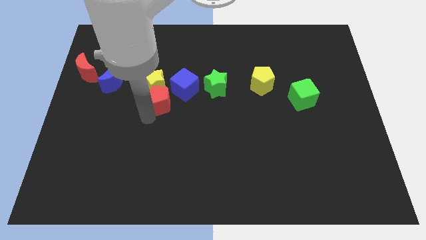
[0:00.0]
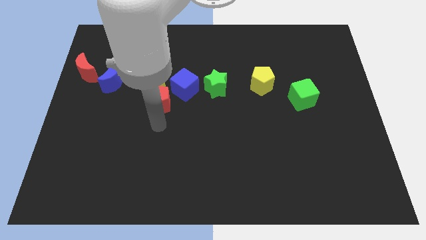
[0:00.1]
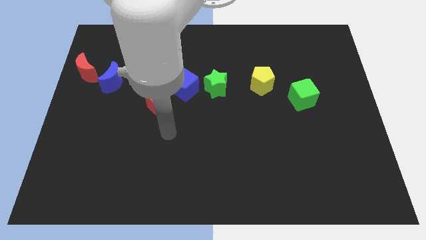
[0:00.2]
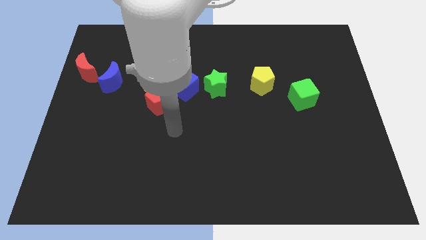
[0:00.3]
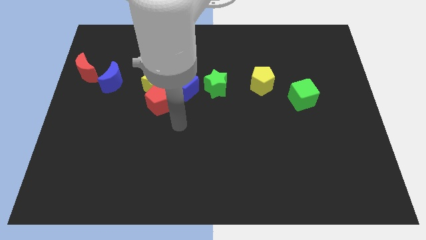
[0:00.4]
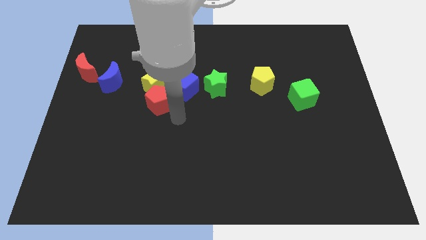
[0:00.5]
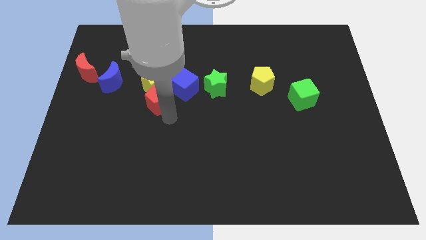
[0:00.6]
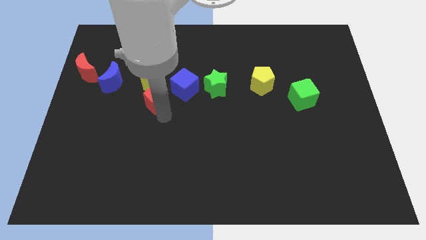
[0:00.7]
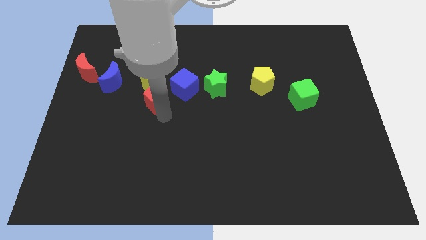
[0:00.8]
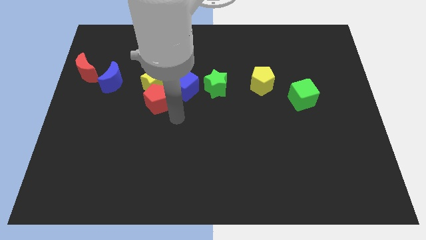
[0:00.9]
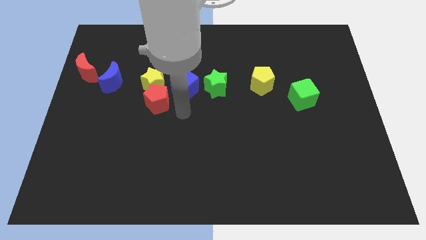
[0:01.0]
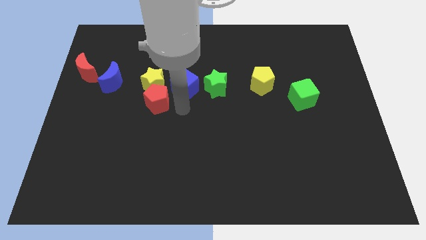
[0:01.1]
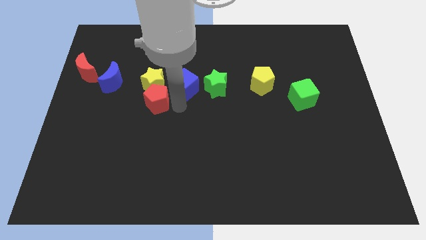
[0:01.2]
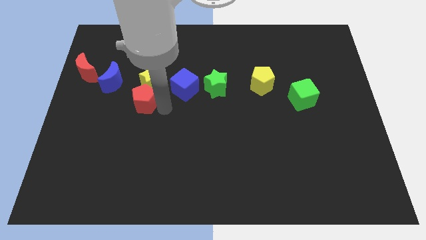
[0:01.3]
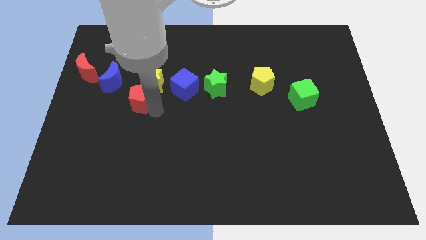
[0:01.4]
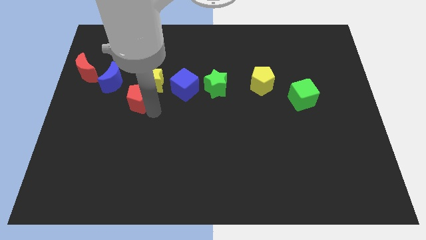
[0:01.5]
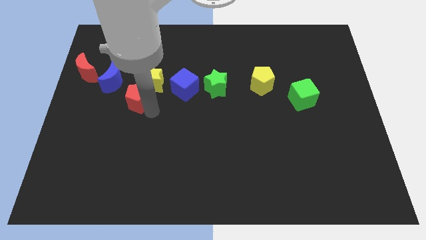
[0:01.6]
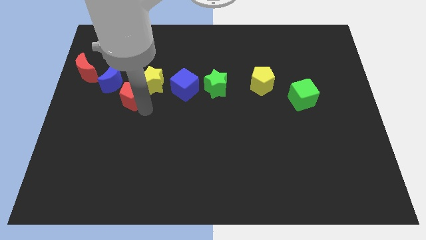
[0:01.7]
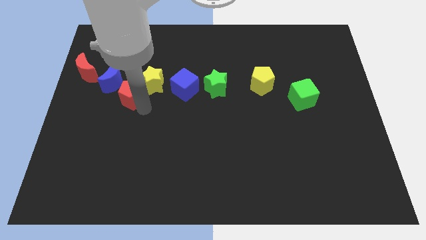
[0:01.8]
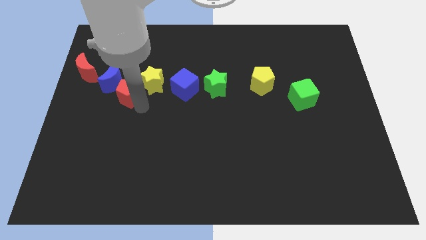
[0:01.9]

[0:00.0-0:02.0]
slide the red pentagon diagonally bottom left to the yellow star

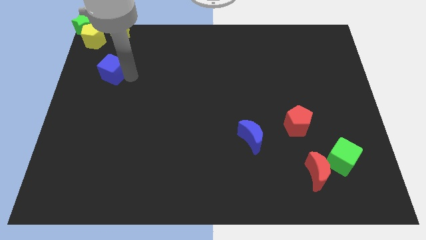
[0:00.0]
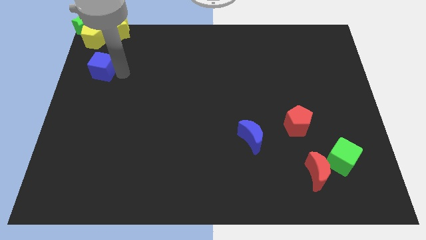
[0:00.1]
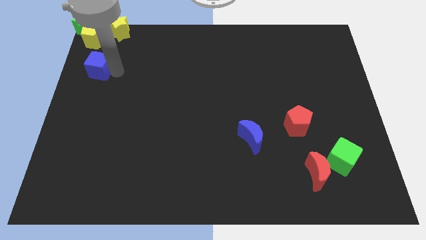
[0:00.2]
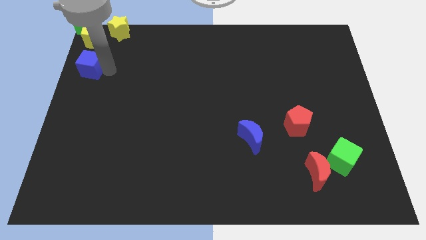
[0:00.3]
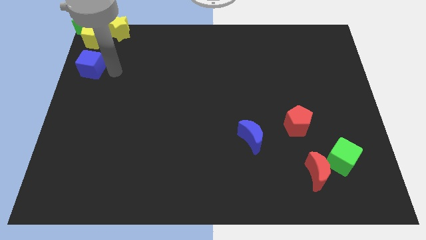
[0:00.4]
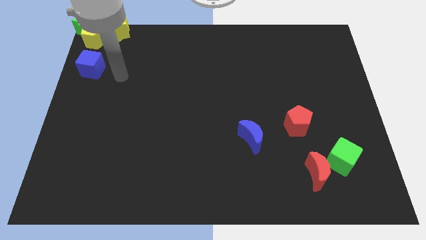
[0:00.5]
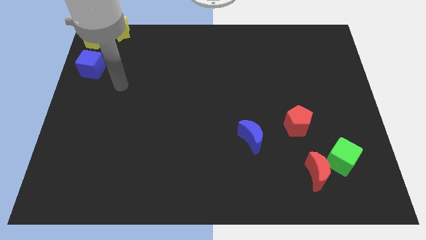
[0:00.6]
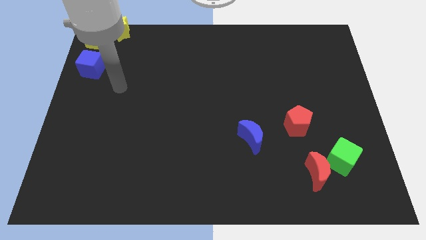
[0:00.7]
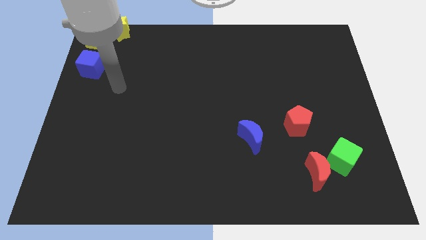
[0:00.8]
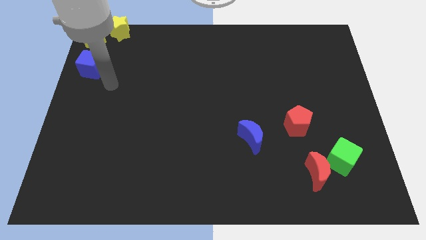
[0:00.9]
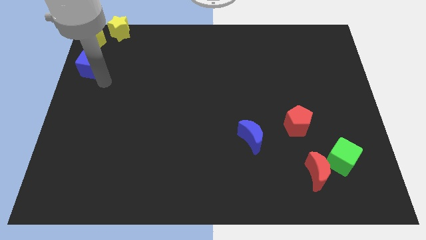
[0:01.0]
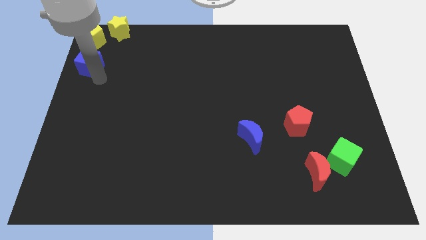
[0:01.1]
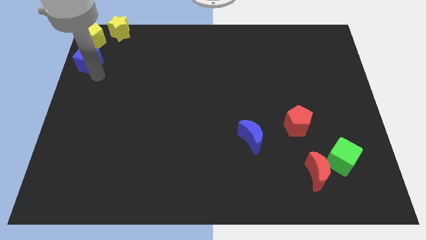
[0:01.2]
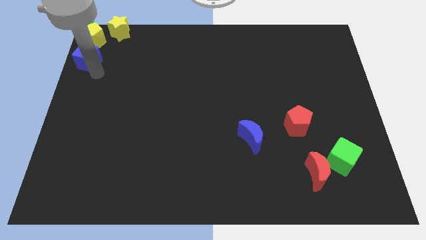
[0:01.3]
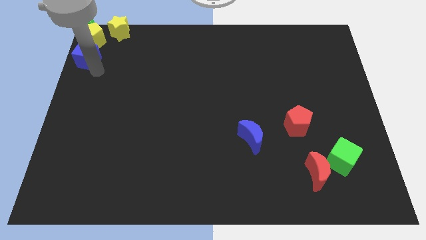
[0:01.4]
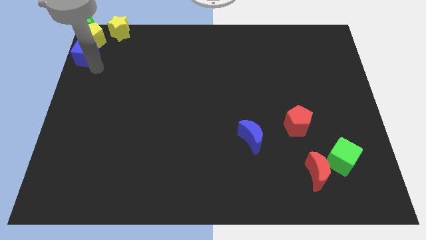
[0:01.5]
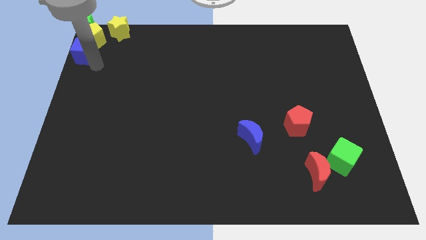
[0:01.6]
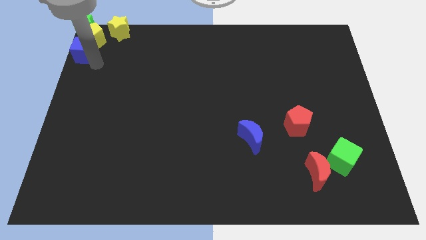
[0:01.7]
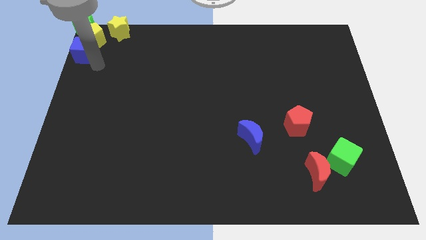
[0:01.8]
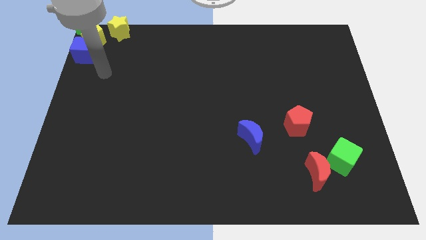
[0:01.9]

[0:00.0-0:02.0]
push the blue cube to the bottom left side of the yellow pentagon

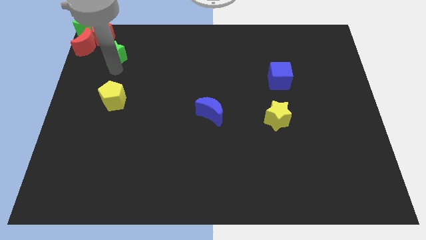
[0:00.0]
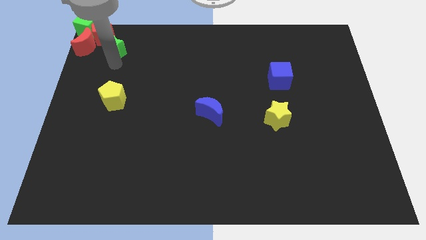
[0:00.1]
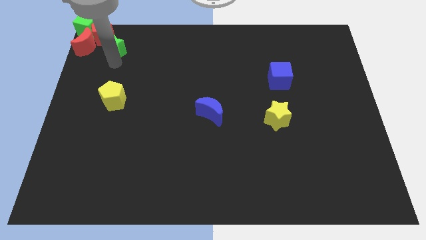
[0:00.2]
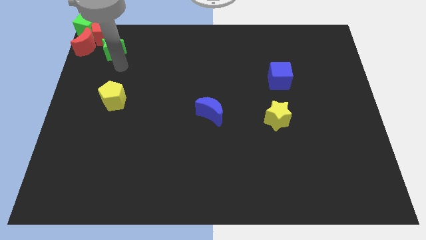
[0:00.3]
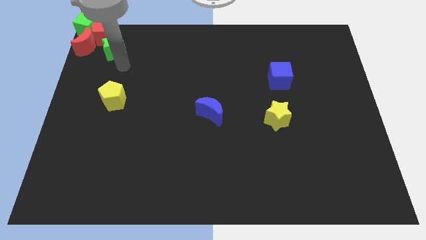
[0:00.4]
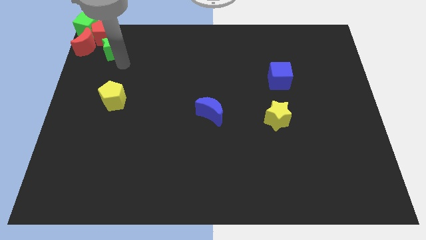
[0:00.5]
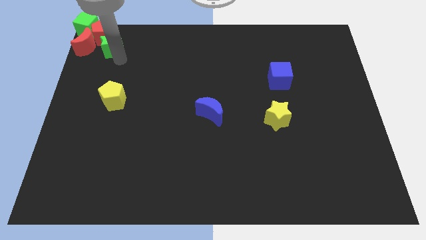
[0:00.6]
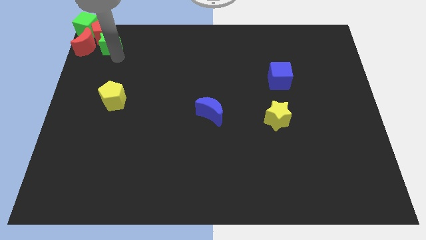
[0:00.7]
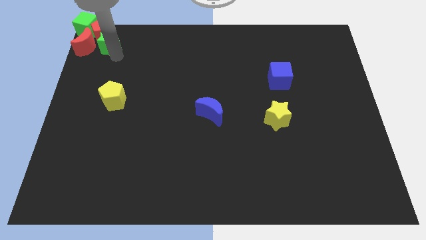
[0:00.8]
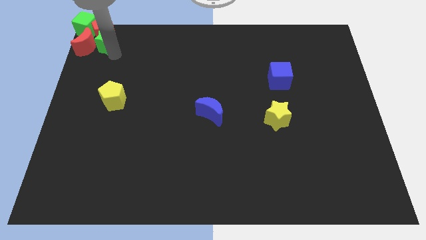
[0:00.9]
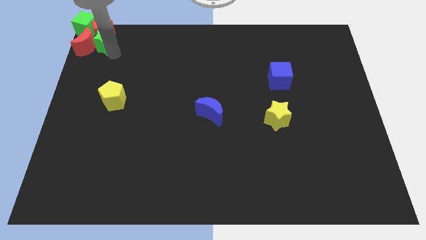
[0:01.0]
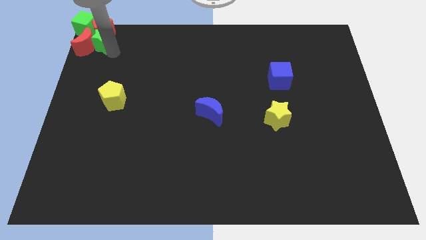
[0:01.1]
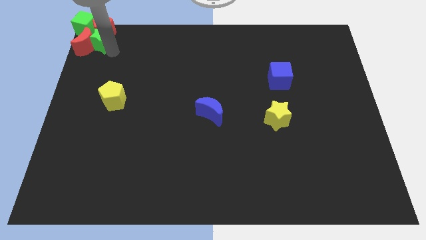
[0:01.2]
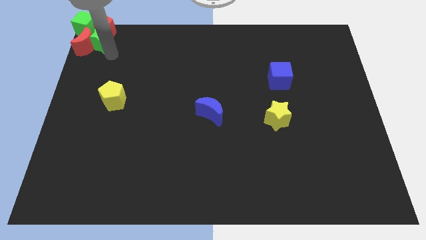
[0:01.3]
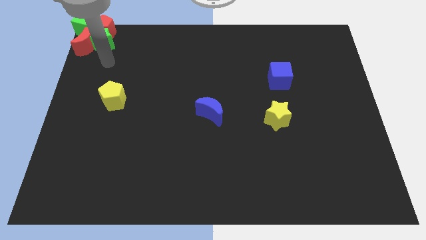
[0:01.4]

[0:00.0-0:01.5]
add green star to the red blocks and green cube at the top left corner

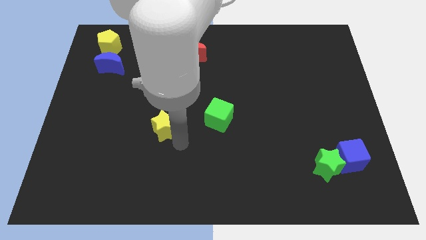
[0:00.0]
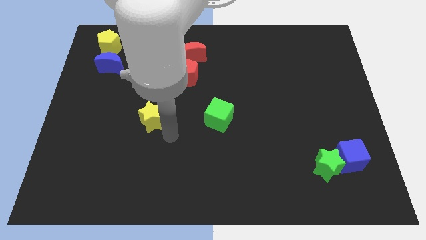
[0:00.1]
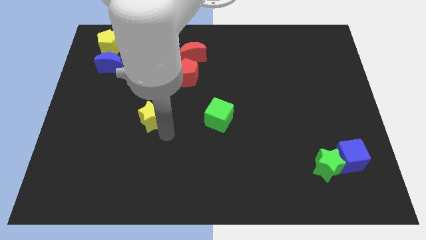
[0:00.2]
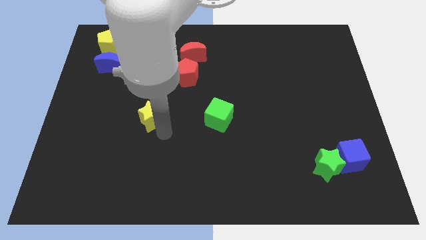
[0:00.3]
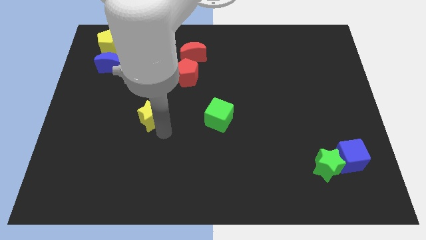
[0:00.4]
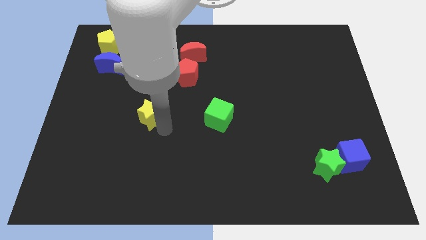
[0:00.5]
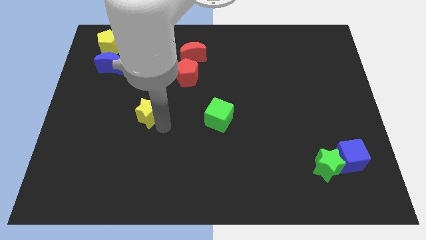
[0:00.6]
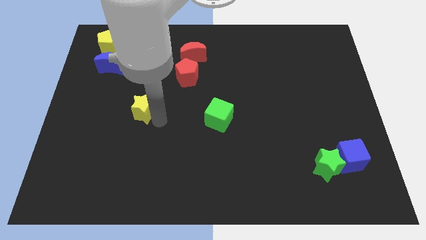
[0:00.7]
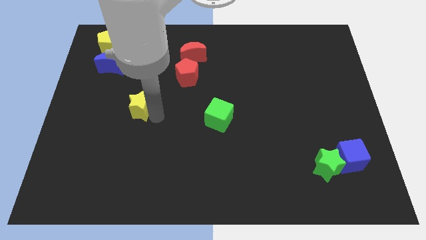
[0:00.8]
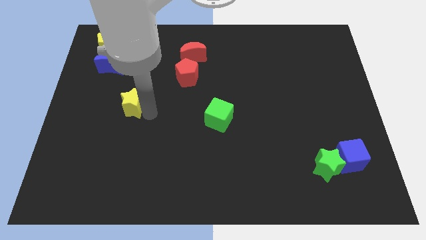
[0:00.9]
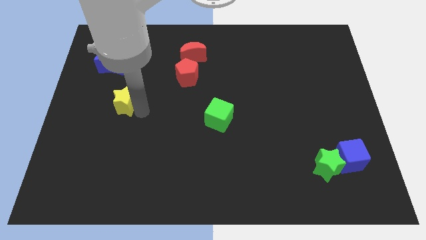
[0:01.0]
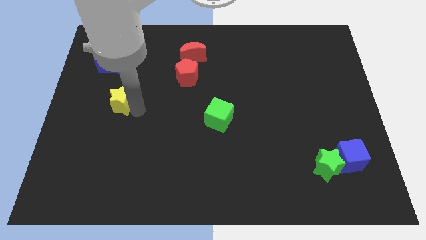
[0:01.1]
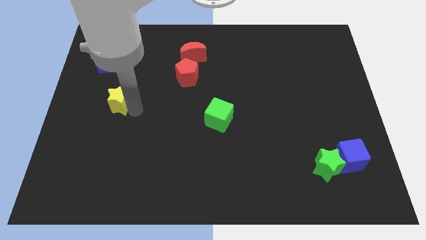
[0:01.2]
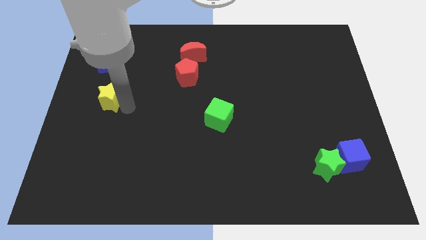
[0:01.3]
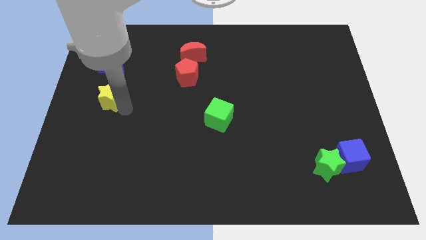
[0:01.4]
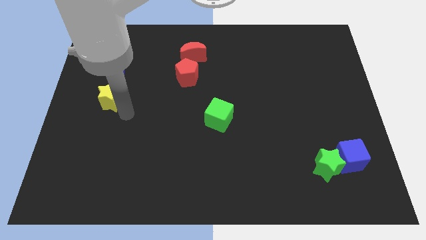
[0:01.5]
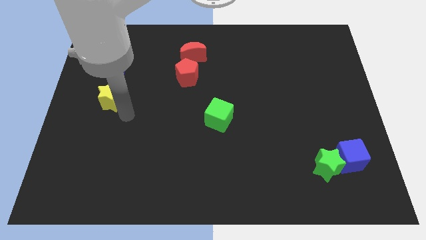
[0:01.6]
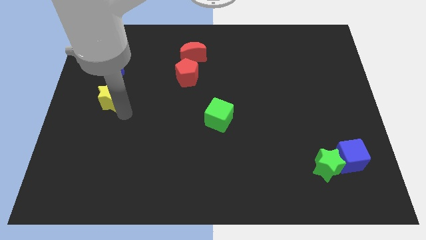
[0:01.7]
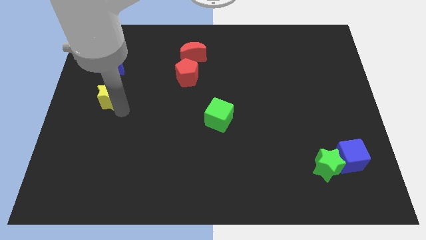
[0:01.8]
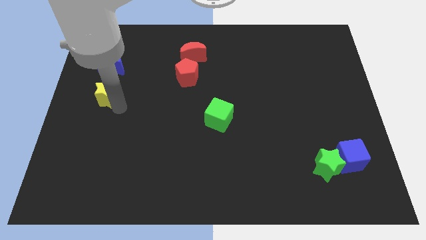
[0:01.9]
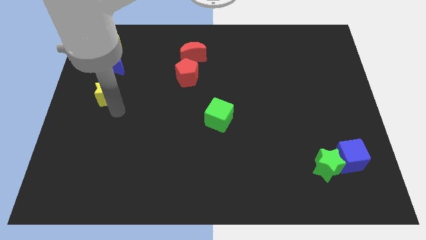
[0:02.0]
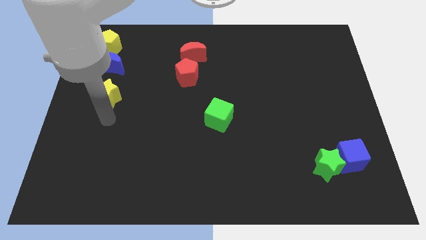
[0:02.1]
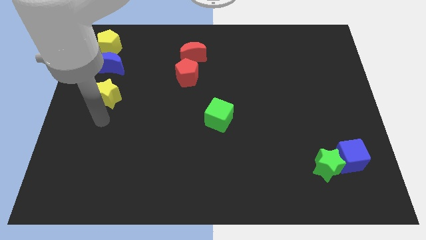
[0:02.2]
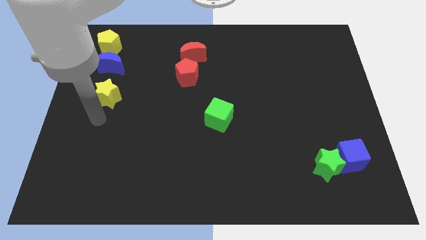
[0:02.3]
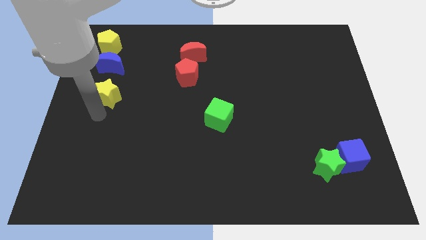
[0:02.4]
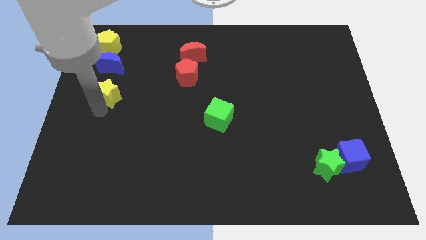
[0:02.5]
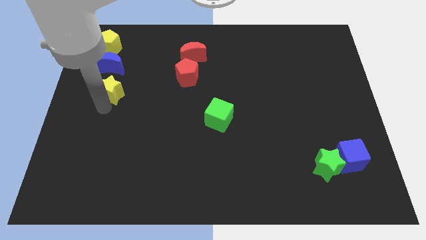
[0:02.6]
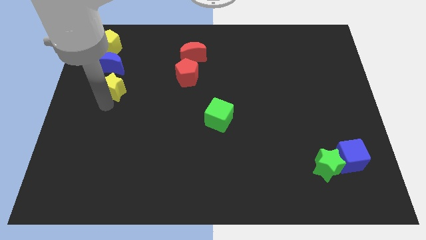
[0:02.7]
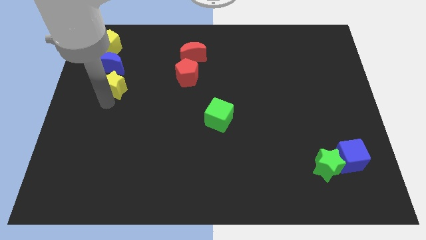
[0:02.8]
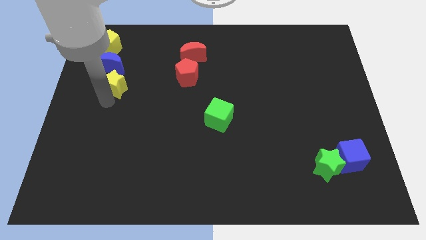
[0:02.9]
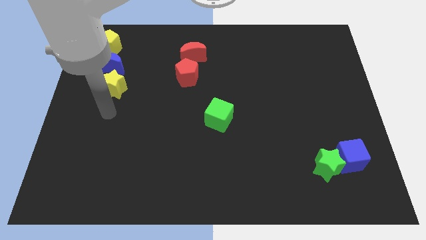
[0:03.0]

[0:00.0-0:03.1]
place yellow star below blue crescent

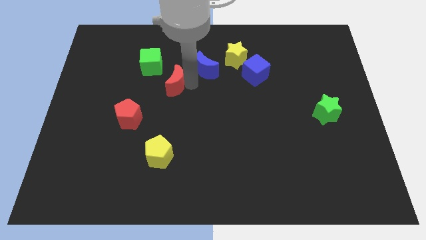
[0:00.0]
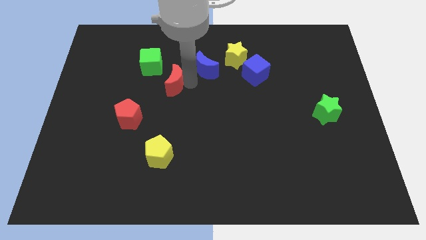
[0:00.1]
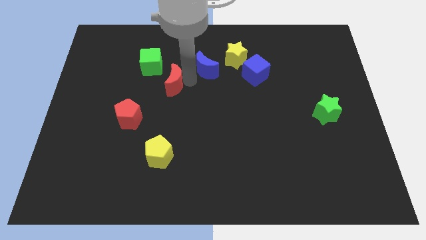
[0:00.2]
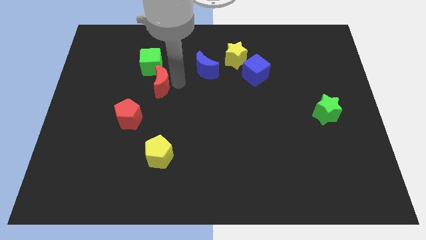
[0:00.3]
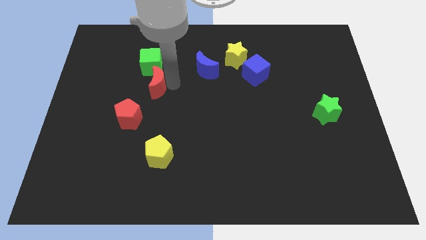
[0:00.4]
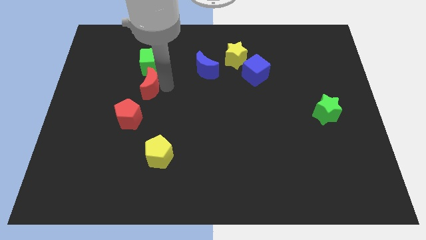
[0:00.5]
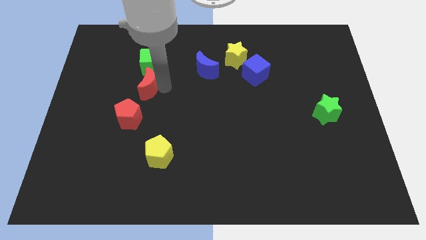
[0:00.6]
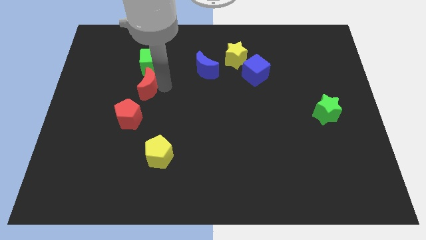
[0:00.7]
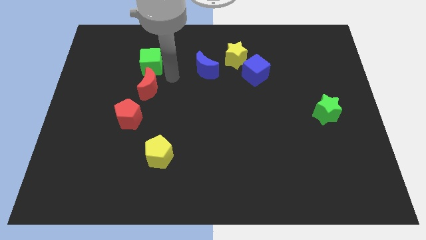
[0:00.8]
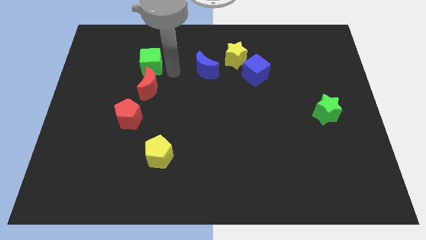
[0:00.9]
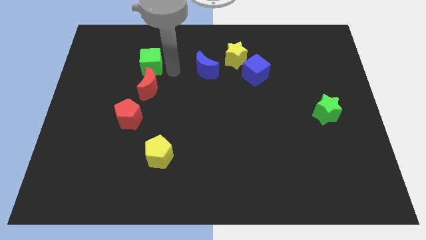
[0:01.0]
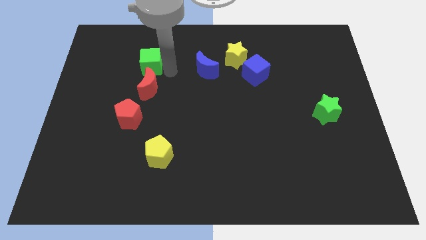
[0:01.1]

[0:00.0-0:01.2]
move red moon below the green cube
